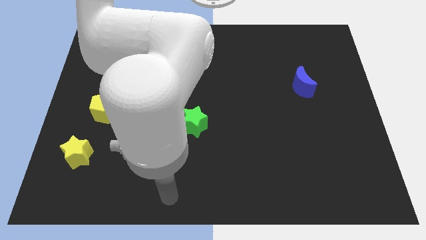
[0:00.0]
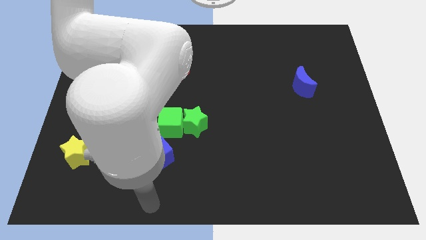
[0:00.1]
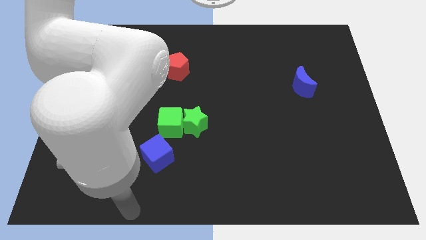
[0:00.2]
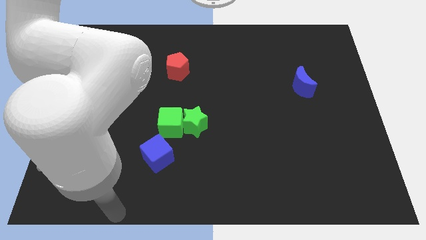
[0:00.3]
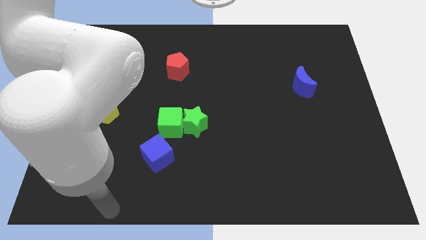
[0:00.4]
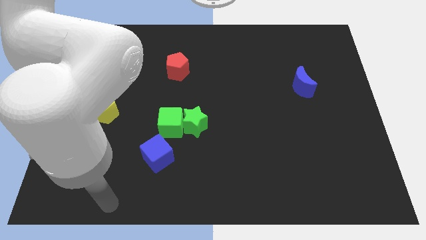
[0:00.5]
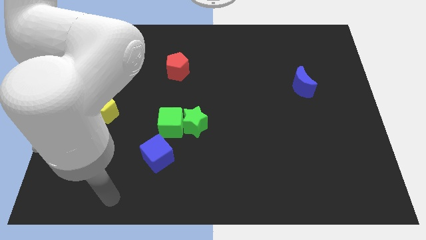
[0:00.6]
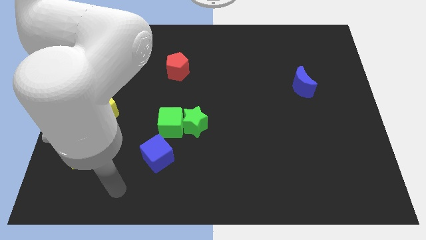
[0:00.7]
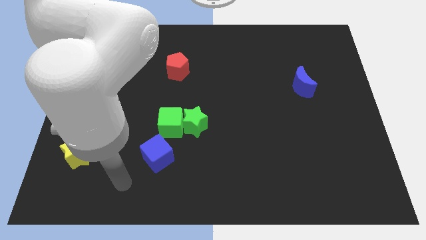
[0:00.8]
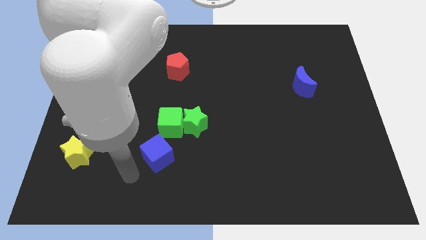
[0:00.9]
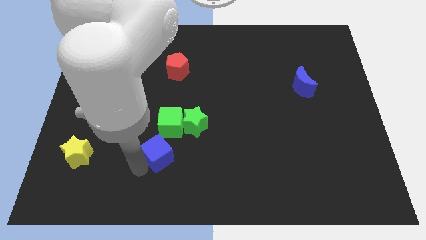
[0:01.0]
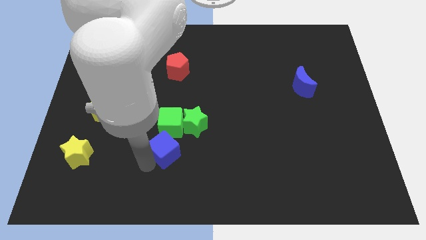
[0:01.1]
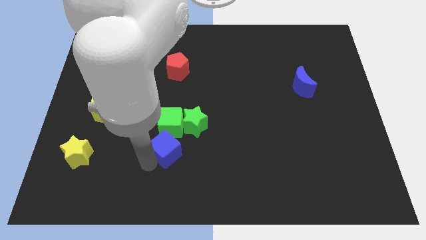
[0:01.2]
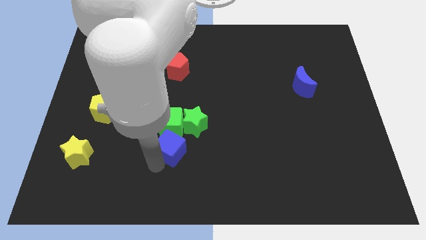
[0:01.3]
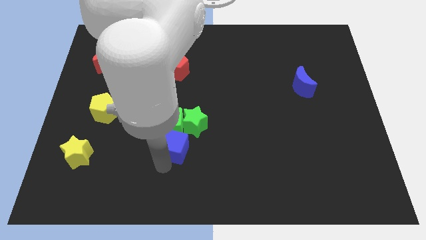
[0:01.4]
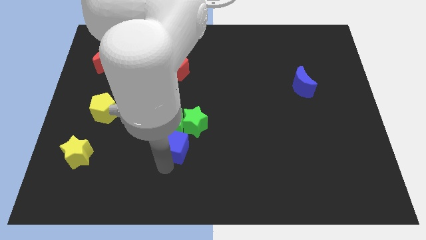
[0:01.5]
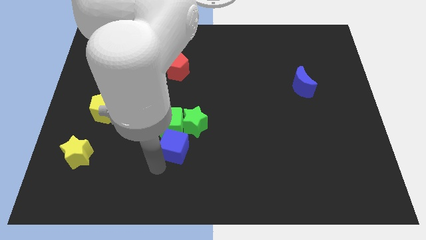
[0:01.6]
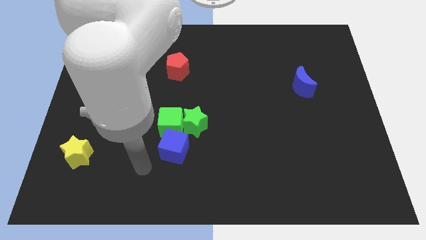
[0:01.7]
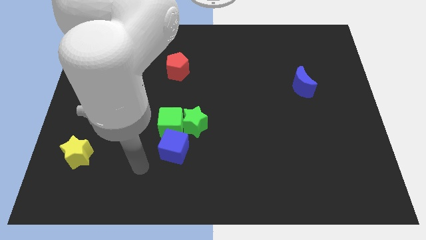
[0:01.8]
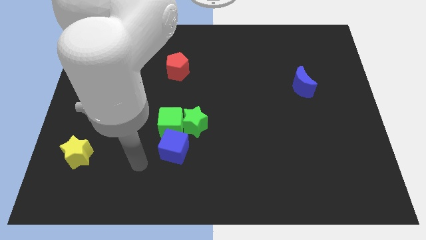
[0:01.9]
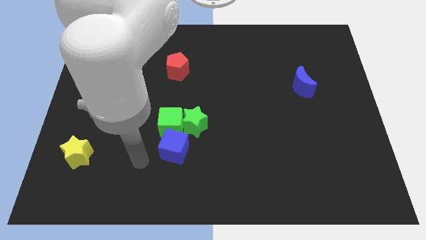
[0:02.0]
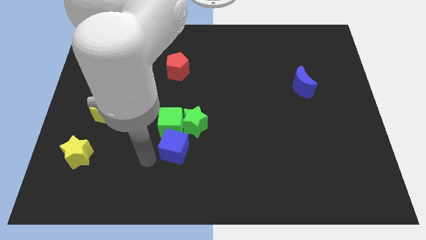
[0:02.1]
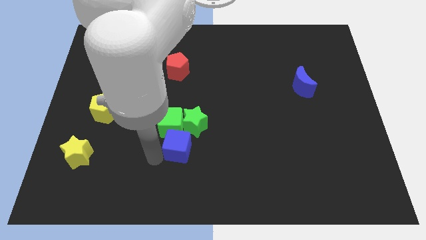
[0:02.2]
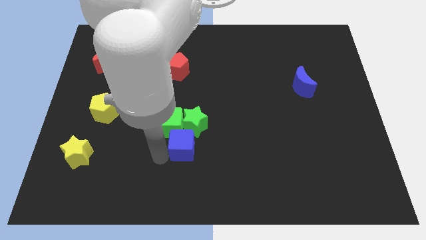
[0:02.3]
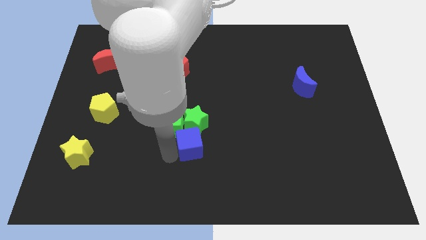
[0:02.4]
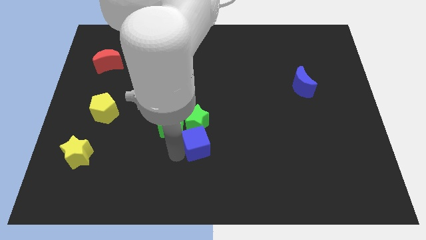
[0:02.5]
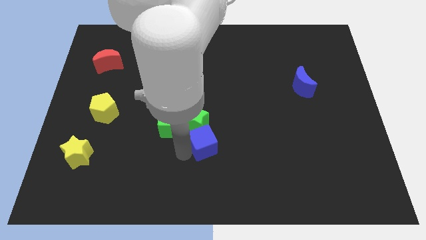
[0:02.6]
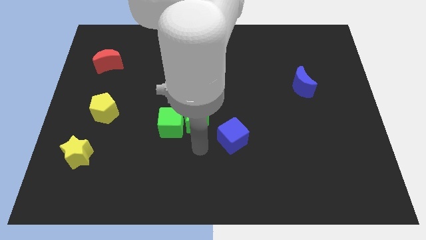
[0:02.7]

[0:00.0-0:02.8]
place blue cube to the bottom of green star

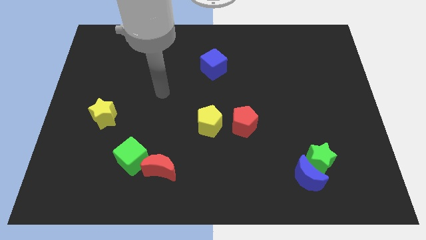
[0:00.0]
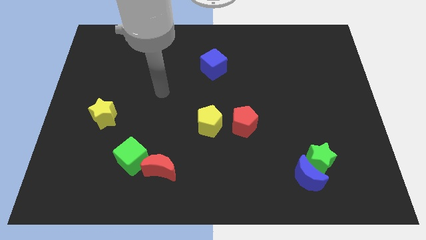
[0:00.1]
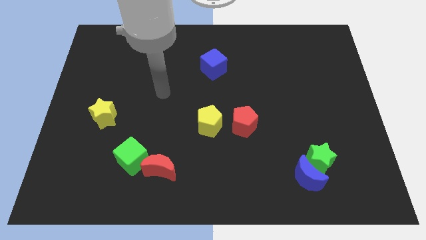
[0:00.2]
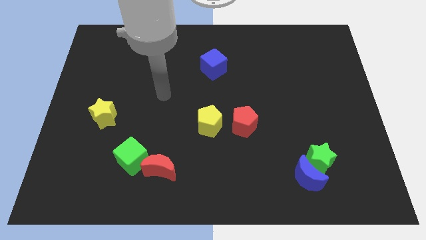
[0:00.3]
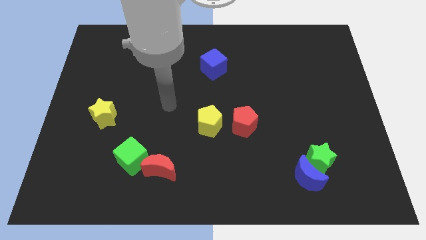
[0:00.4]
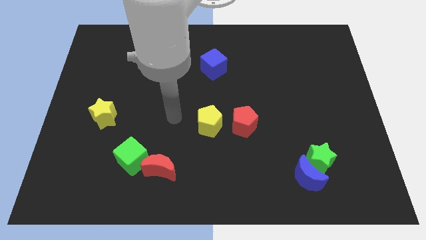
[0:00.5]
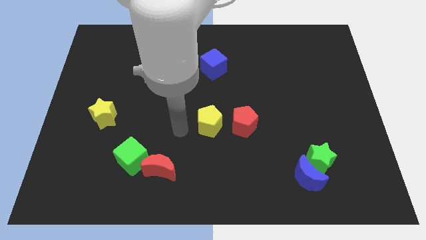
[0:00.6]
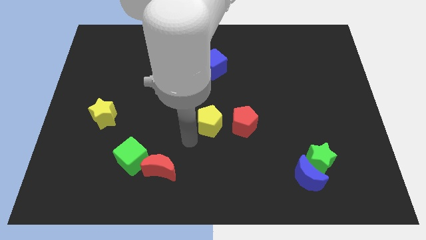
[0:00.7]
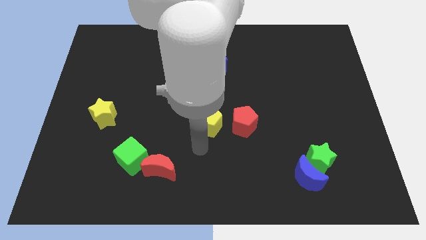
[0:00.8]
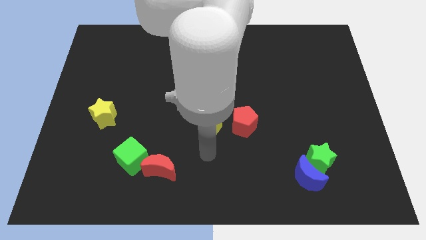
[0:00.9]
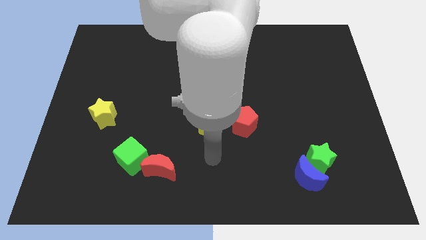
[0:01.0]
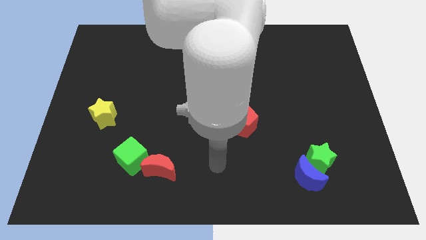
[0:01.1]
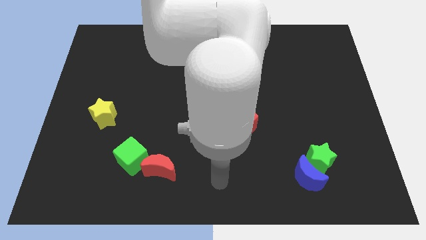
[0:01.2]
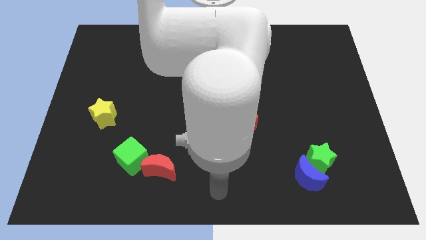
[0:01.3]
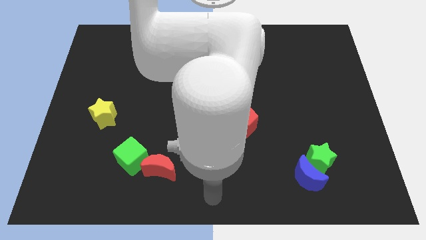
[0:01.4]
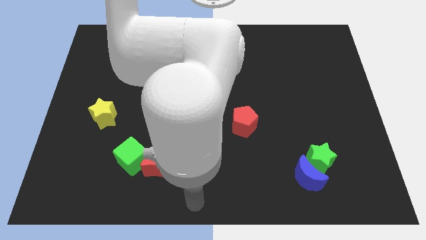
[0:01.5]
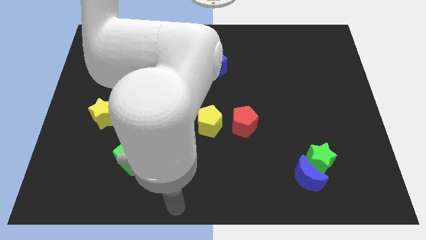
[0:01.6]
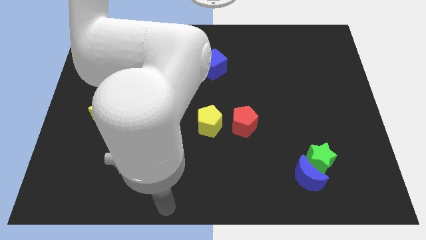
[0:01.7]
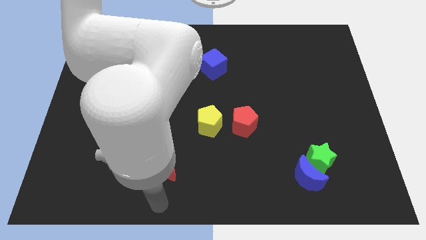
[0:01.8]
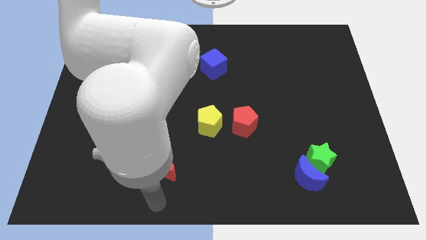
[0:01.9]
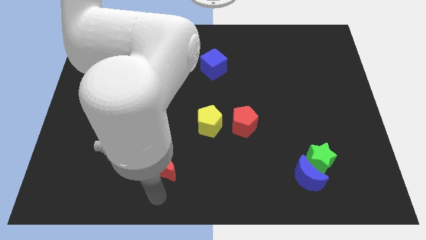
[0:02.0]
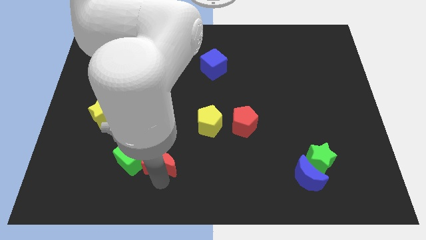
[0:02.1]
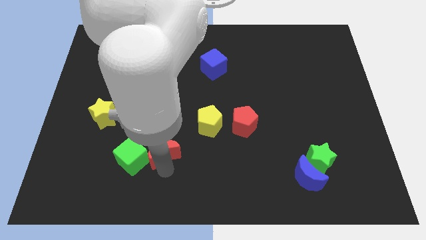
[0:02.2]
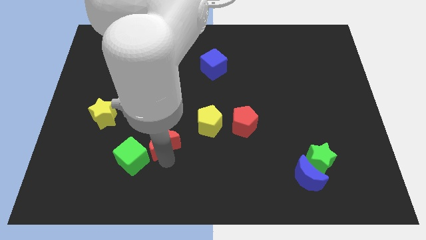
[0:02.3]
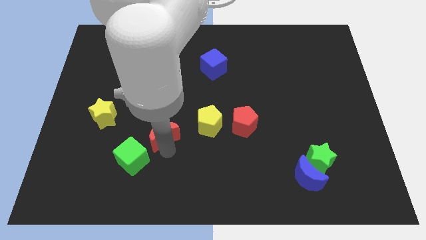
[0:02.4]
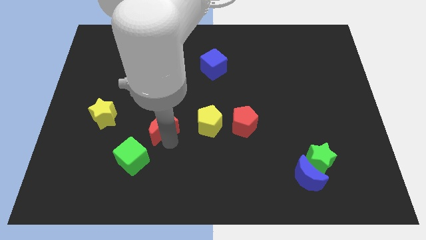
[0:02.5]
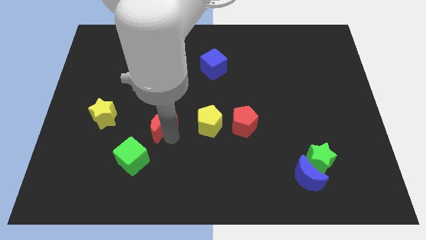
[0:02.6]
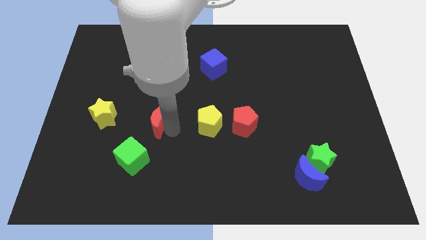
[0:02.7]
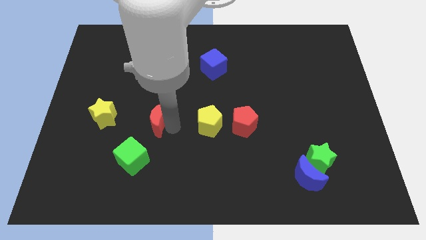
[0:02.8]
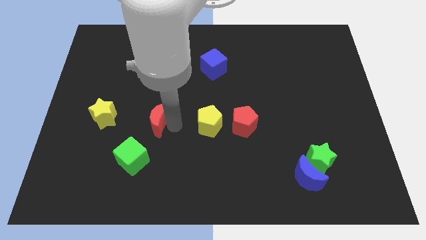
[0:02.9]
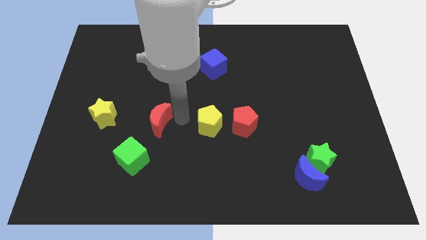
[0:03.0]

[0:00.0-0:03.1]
push red moon upwards

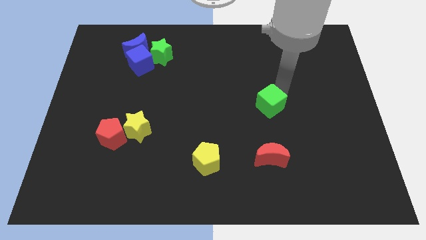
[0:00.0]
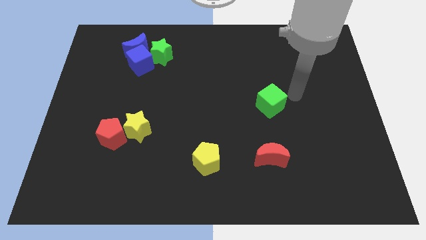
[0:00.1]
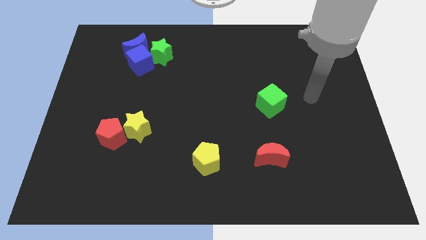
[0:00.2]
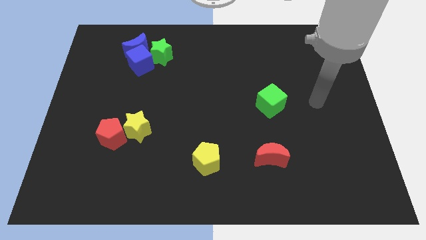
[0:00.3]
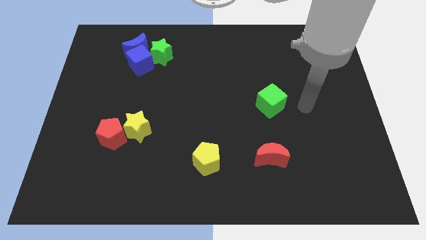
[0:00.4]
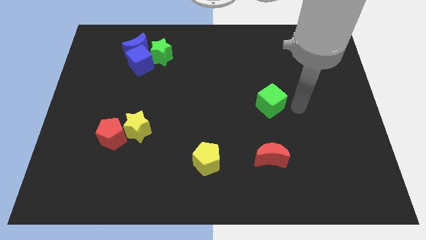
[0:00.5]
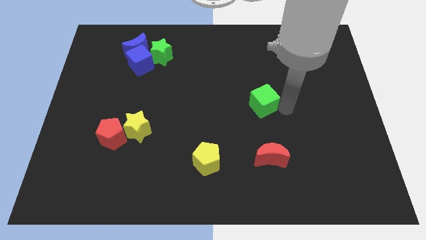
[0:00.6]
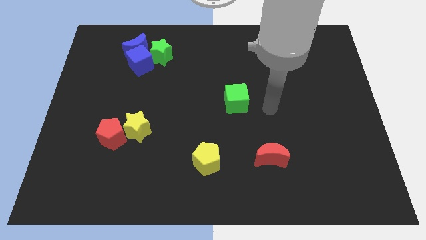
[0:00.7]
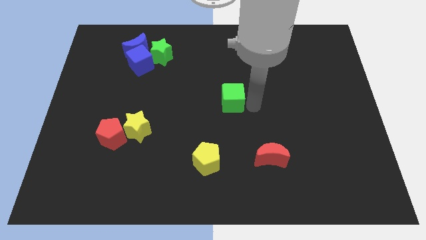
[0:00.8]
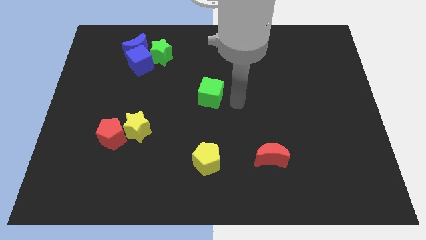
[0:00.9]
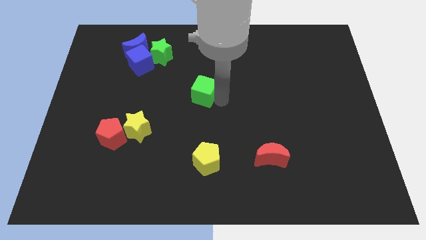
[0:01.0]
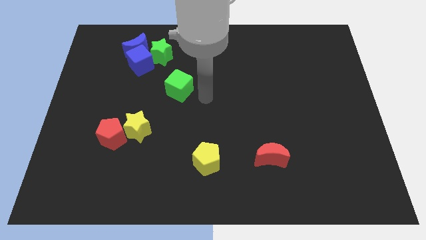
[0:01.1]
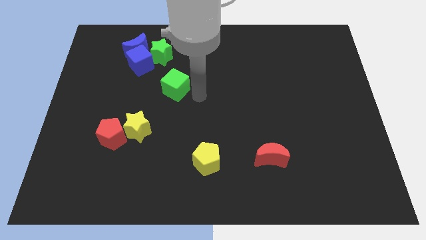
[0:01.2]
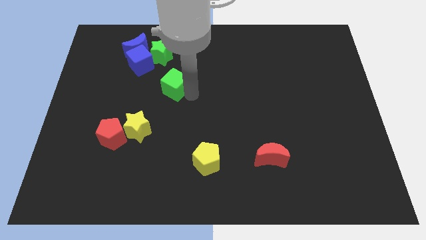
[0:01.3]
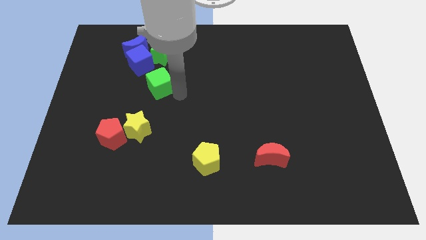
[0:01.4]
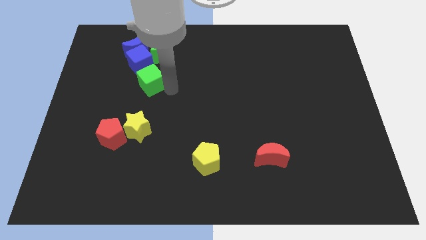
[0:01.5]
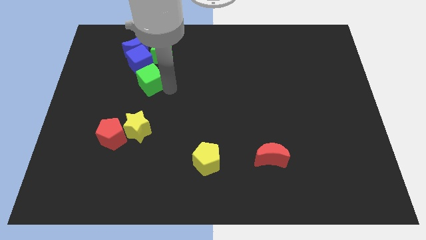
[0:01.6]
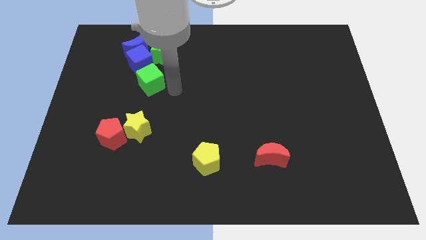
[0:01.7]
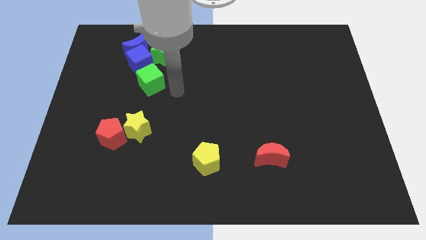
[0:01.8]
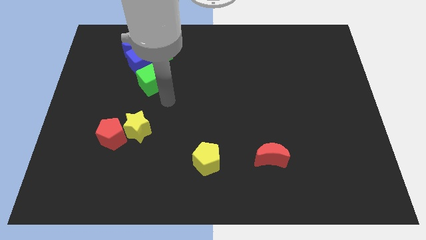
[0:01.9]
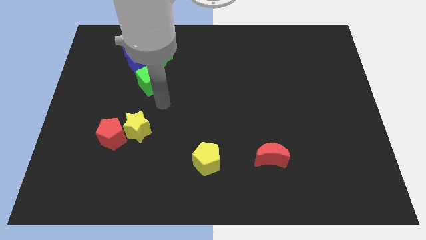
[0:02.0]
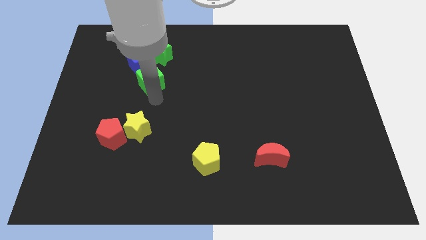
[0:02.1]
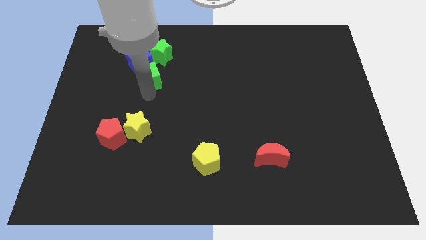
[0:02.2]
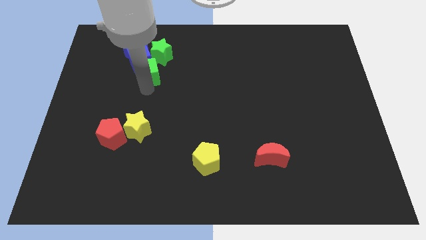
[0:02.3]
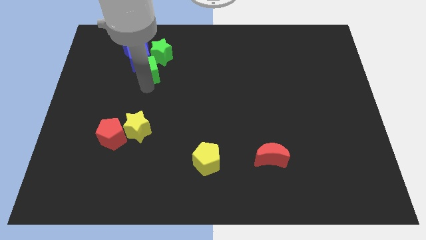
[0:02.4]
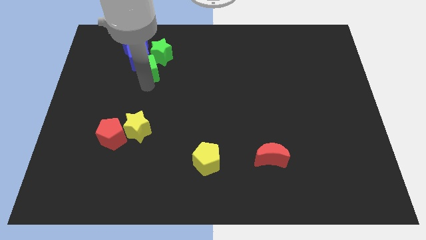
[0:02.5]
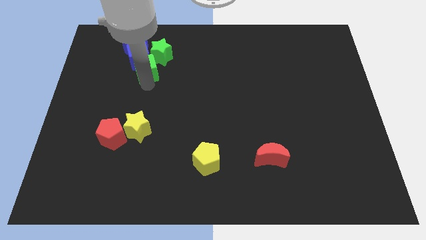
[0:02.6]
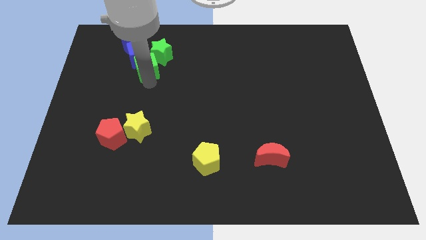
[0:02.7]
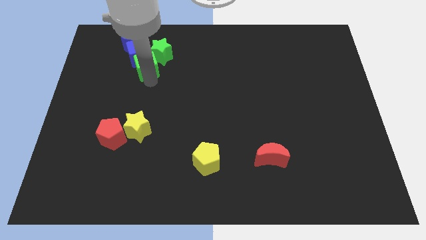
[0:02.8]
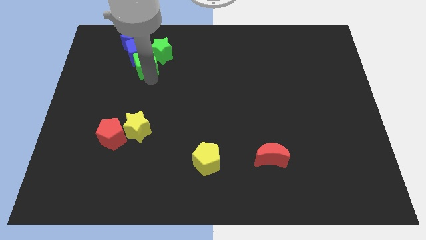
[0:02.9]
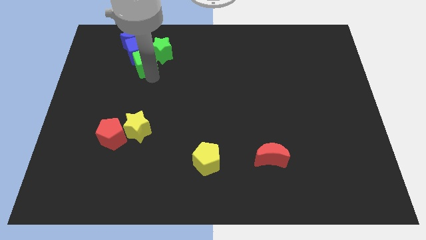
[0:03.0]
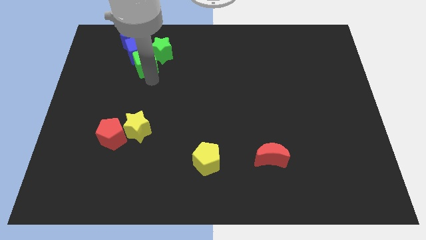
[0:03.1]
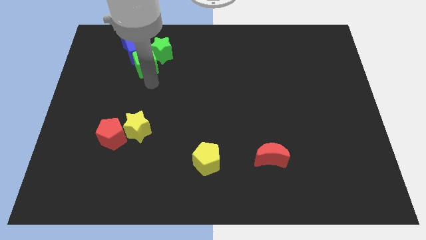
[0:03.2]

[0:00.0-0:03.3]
move the green cube into the bottom side of the blue cube
